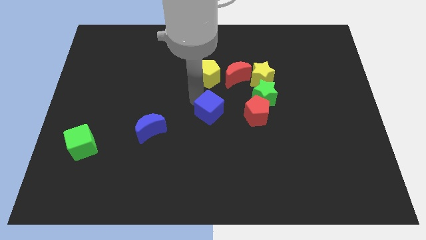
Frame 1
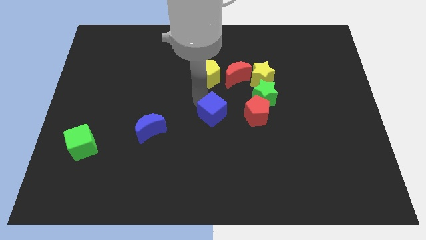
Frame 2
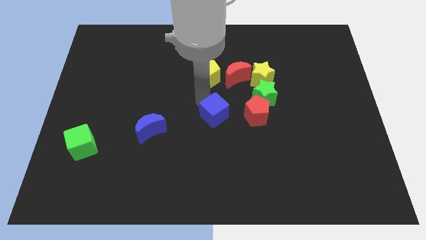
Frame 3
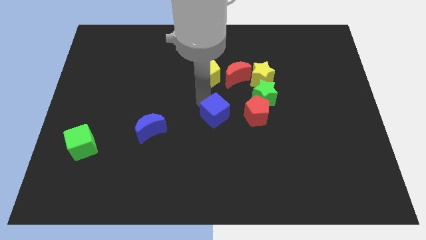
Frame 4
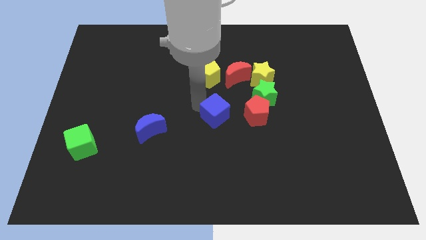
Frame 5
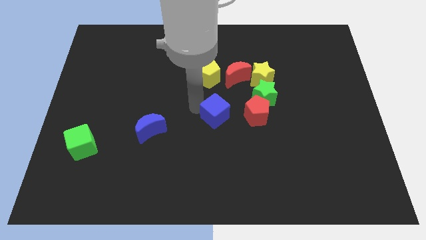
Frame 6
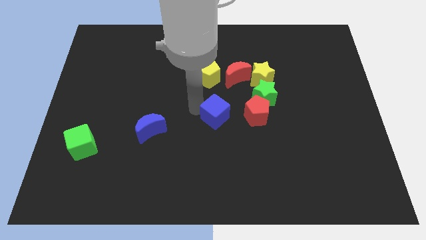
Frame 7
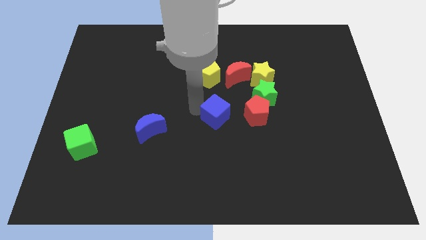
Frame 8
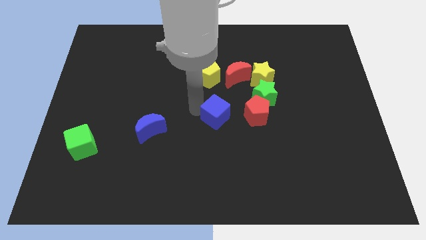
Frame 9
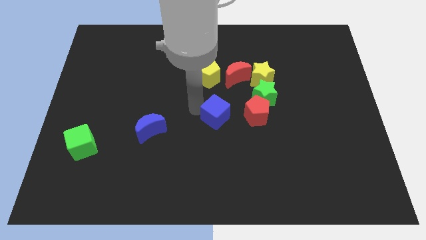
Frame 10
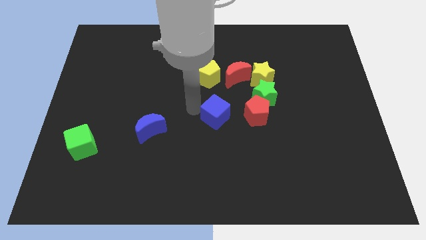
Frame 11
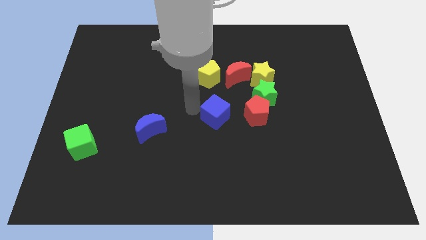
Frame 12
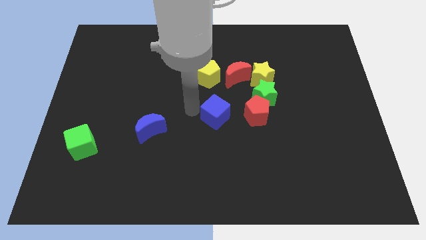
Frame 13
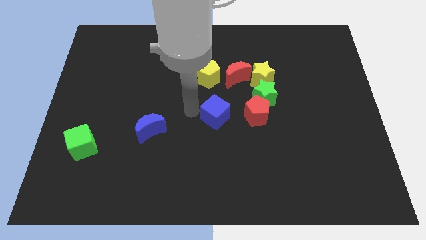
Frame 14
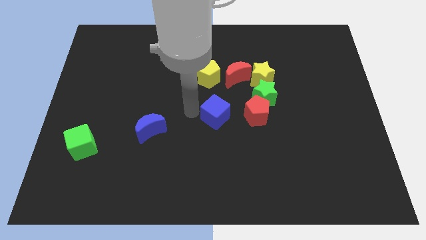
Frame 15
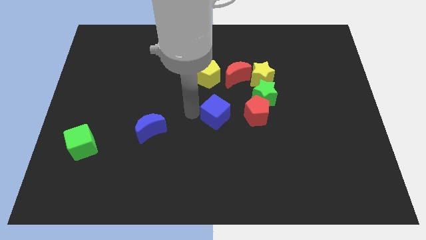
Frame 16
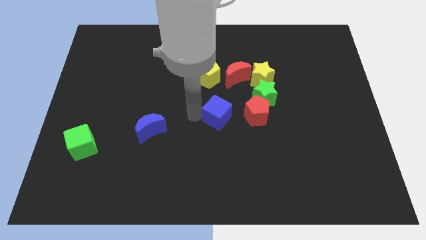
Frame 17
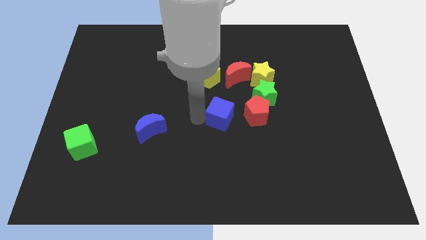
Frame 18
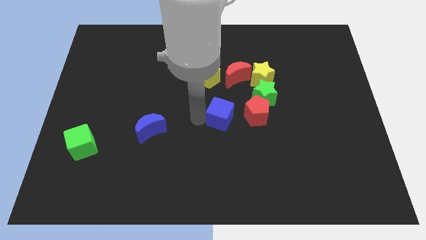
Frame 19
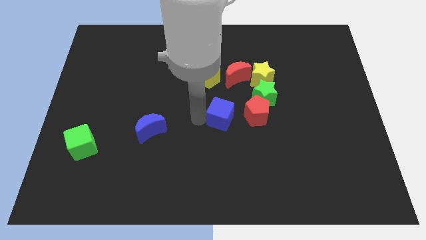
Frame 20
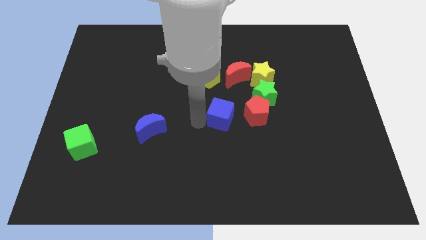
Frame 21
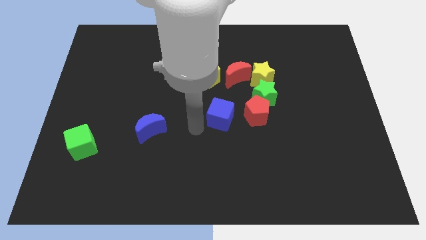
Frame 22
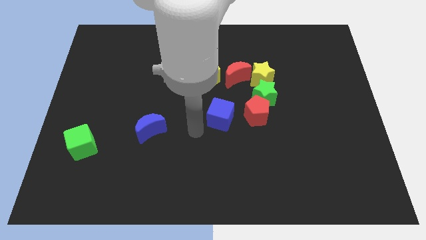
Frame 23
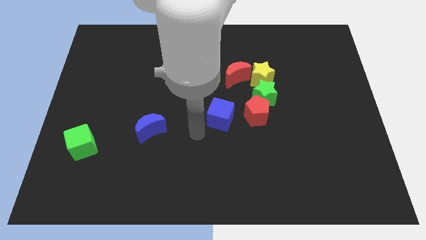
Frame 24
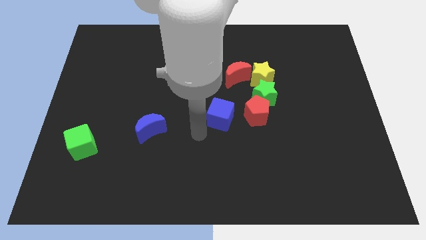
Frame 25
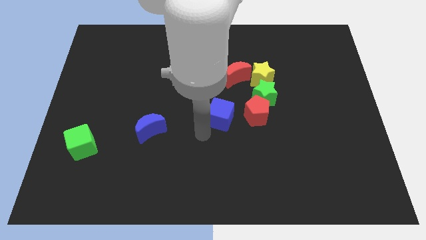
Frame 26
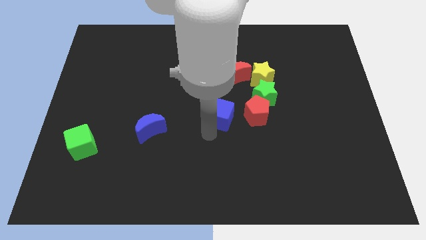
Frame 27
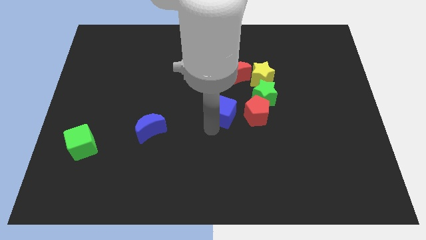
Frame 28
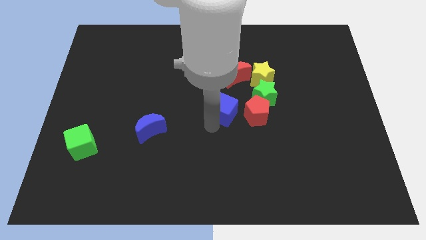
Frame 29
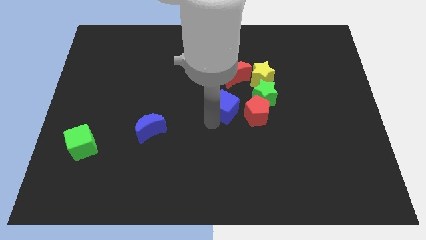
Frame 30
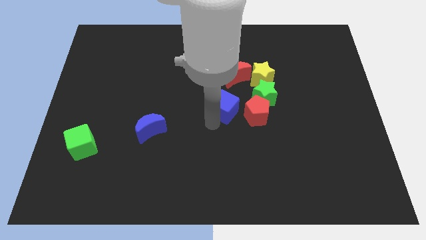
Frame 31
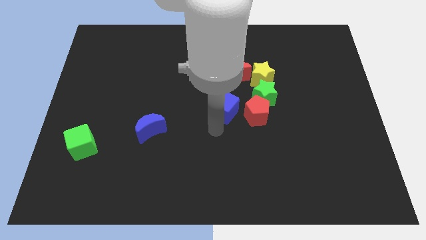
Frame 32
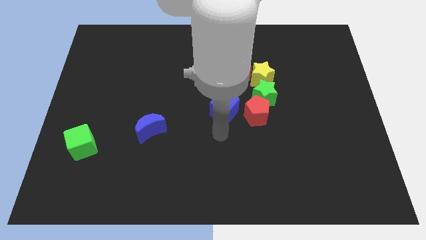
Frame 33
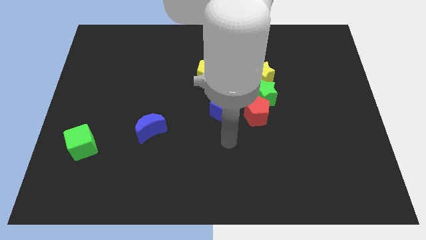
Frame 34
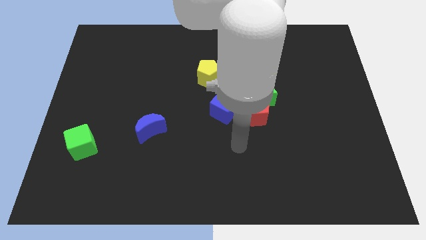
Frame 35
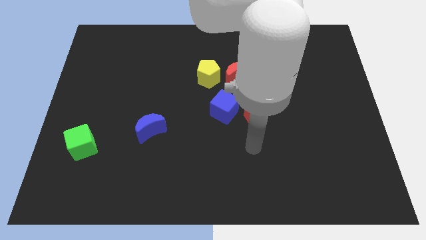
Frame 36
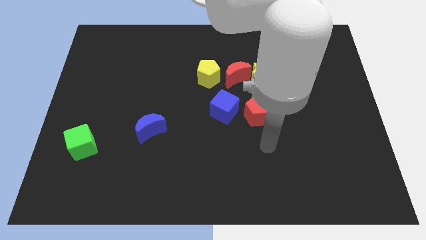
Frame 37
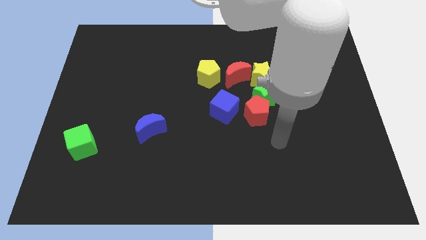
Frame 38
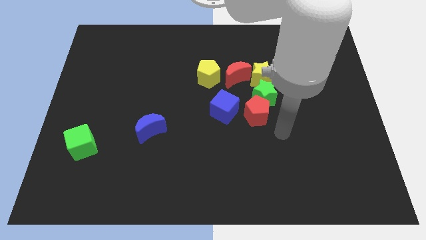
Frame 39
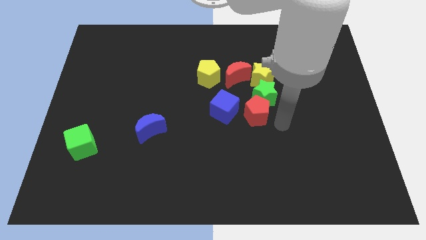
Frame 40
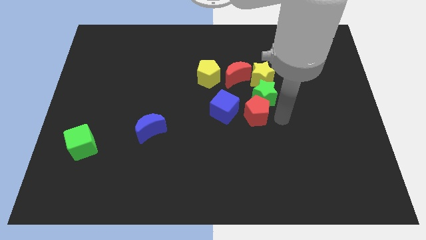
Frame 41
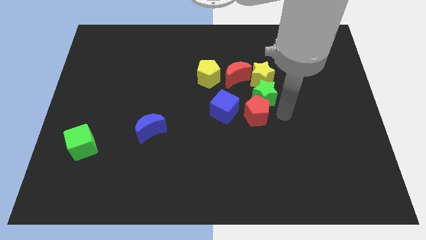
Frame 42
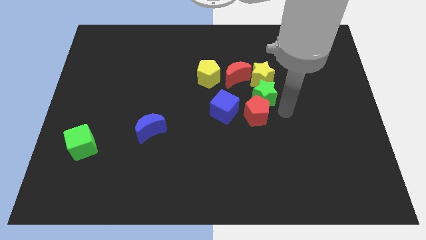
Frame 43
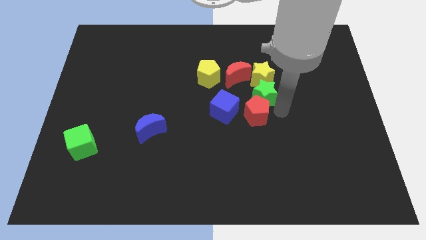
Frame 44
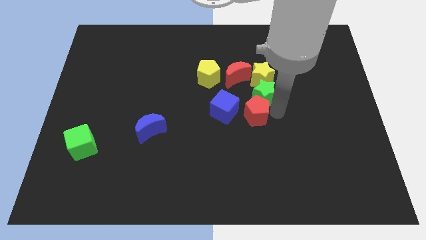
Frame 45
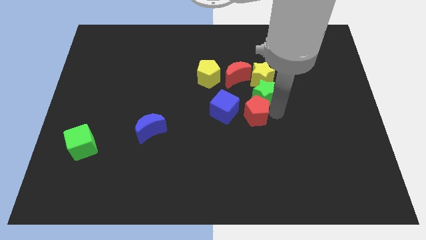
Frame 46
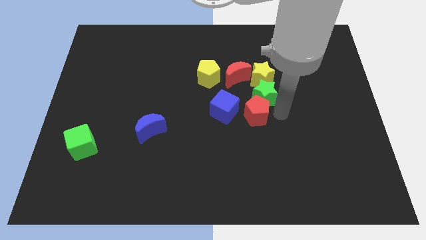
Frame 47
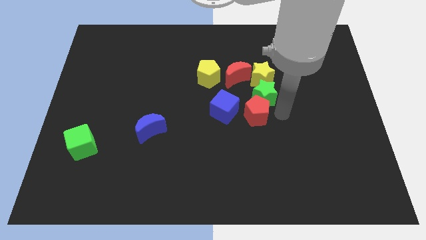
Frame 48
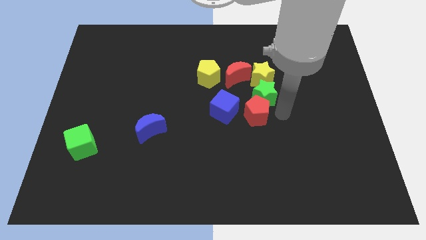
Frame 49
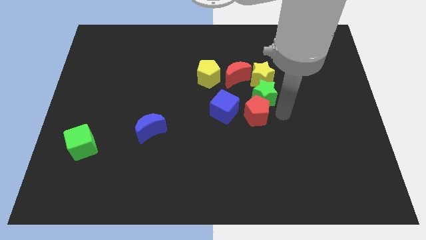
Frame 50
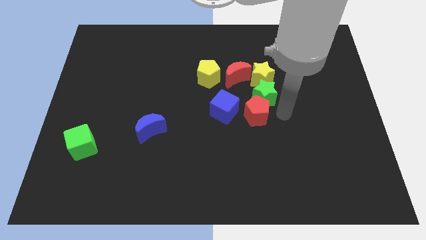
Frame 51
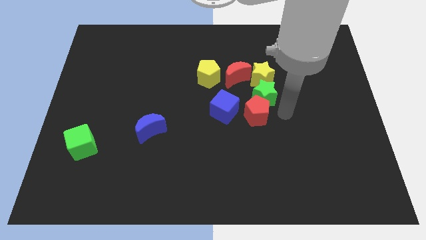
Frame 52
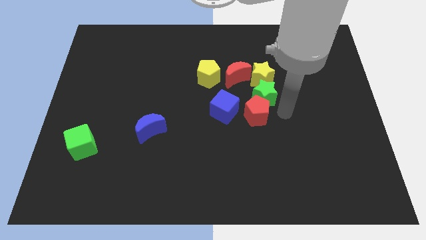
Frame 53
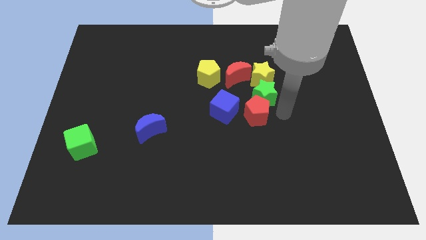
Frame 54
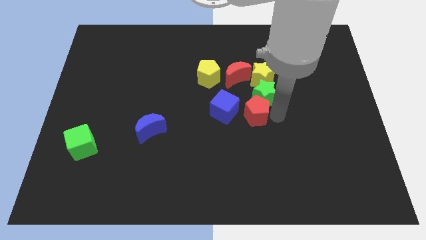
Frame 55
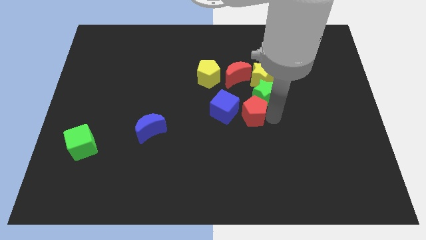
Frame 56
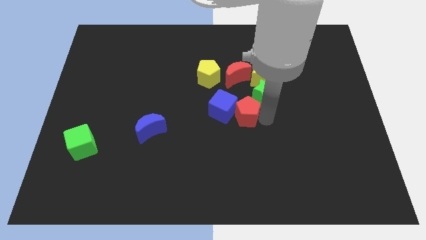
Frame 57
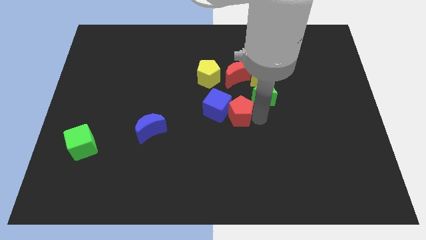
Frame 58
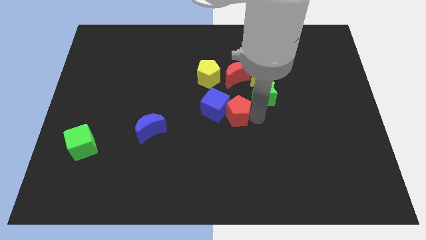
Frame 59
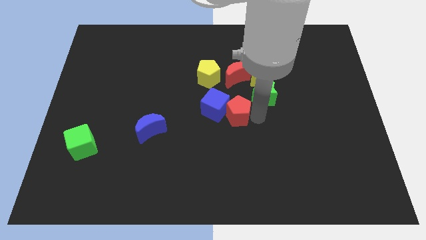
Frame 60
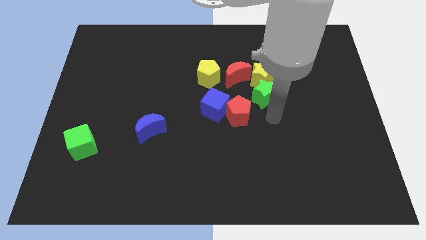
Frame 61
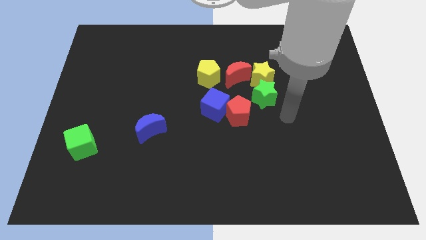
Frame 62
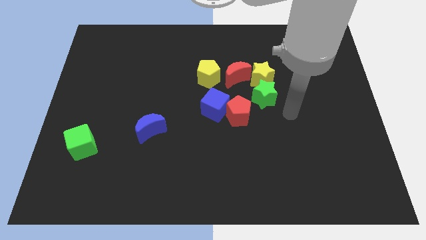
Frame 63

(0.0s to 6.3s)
move the red pentagon into the blue cube

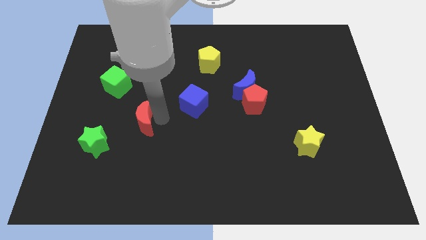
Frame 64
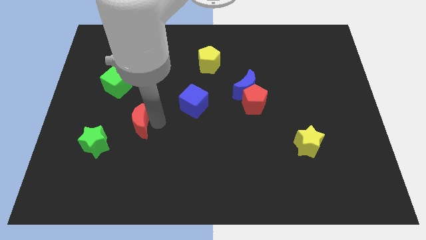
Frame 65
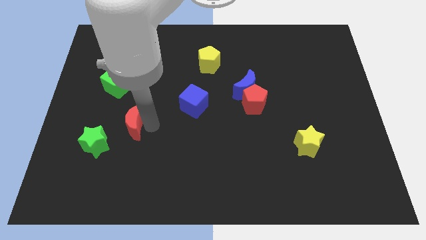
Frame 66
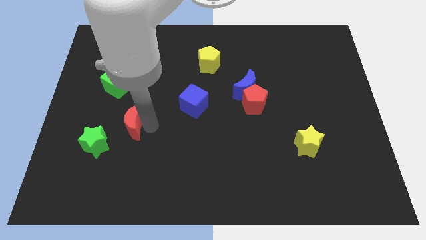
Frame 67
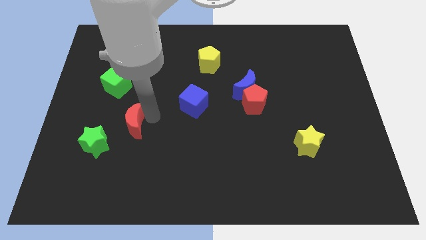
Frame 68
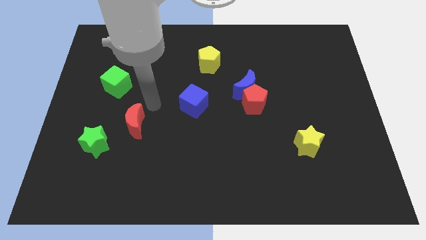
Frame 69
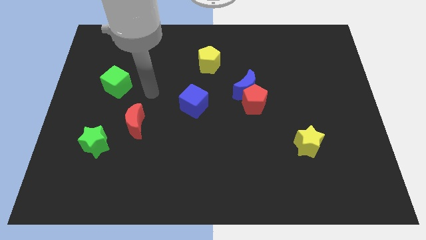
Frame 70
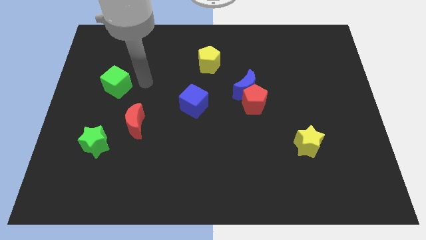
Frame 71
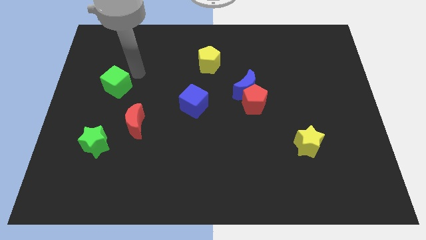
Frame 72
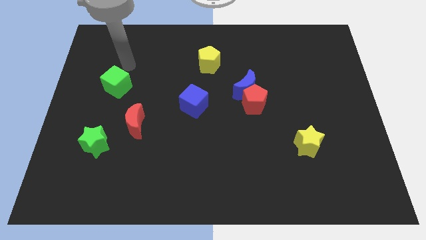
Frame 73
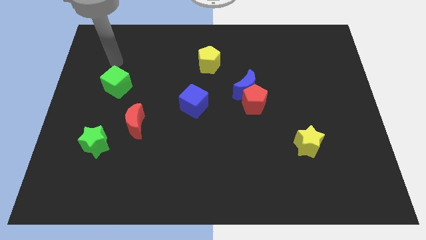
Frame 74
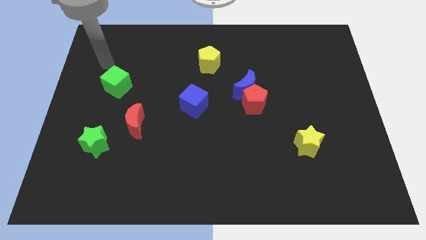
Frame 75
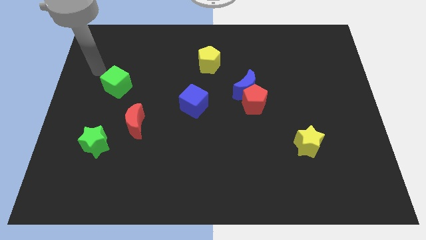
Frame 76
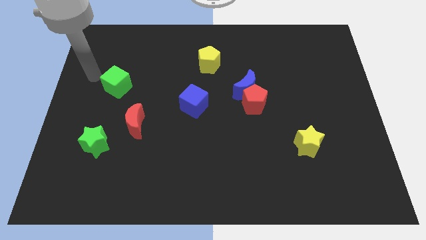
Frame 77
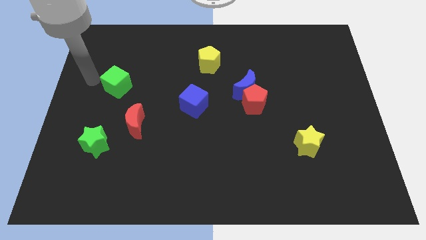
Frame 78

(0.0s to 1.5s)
place the red crescent in between green blocks

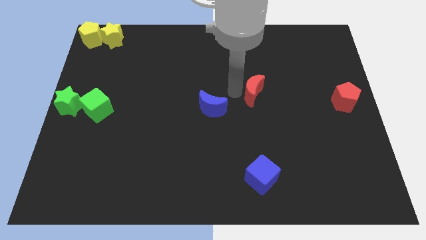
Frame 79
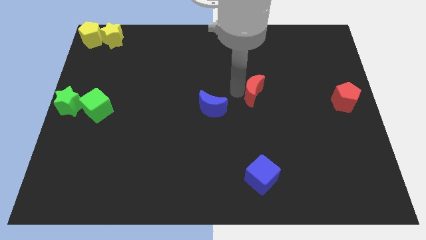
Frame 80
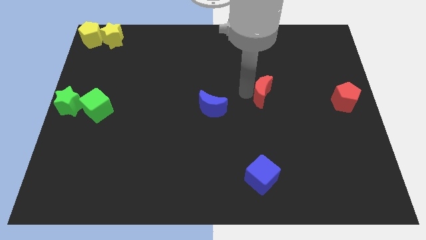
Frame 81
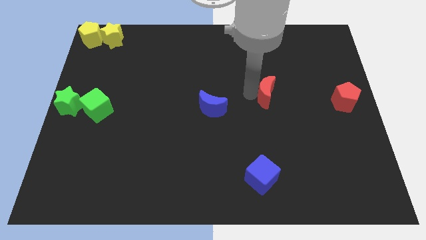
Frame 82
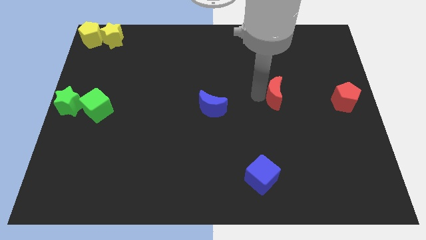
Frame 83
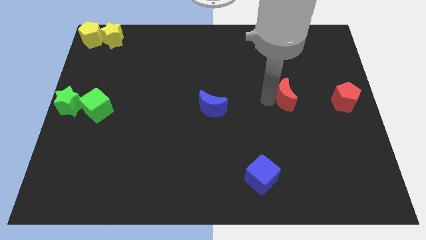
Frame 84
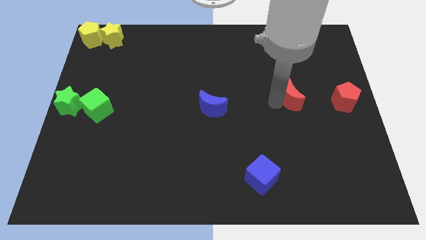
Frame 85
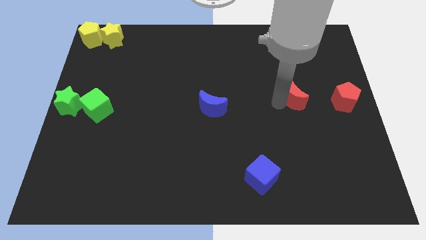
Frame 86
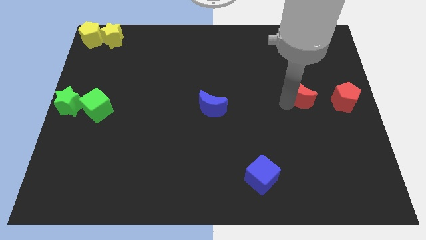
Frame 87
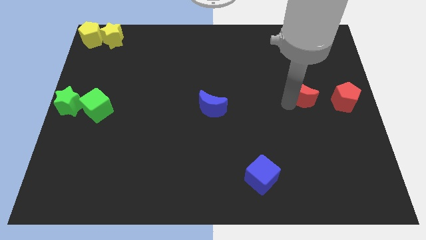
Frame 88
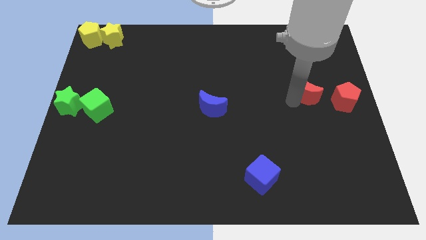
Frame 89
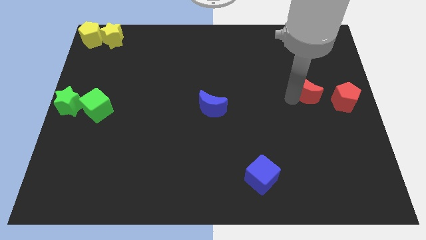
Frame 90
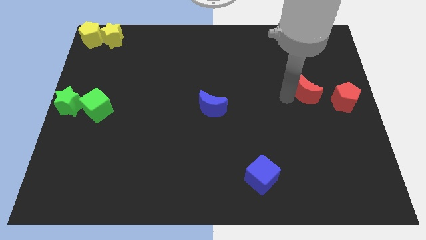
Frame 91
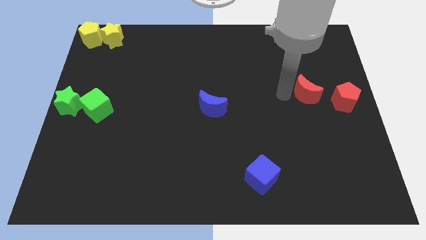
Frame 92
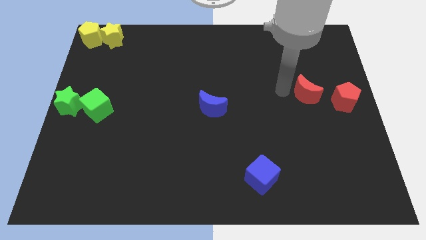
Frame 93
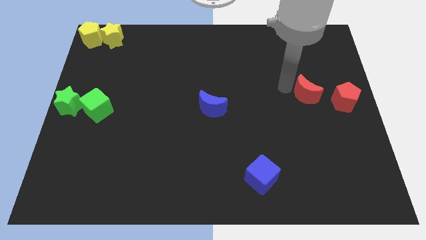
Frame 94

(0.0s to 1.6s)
move the red moon to the left of the red pentagon
